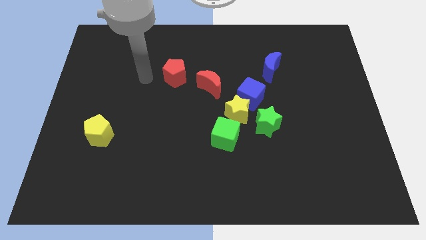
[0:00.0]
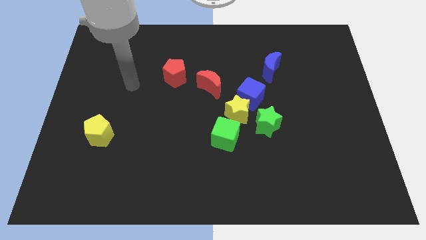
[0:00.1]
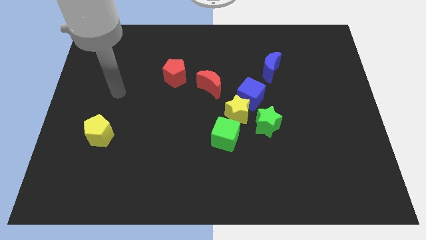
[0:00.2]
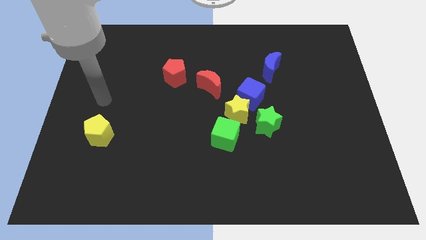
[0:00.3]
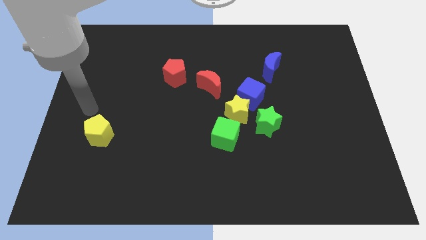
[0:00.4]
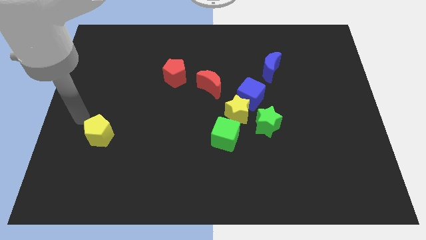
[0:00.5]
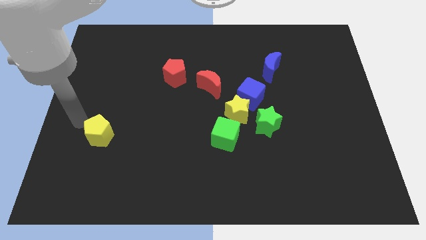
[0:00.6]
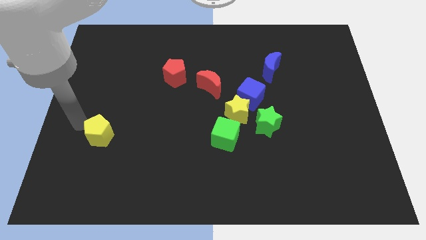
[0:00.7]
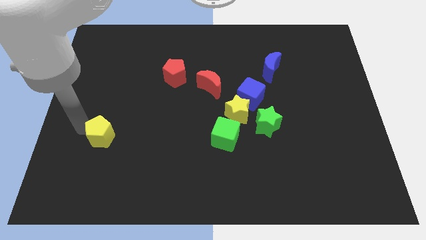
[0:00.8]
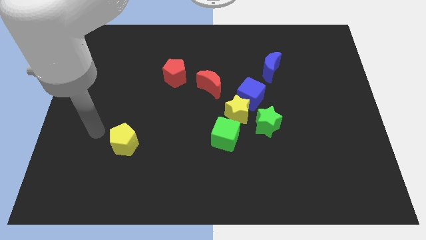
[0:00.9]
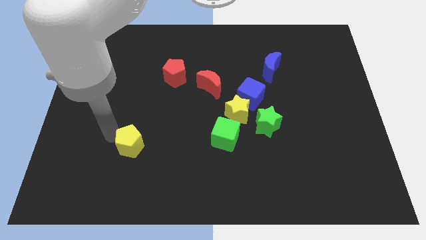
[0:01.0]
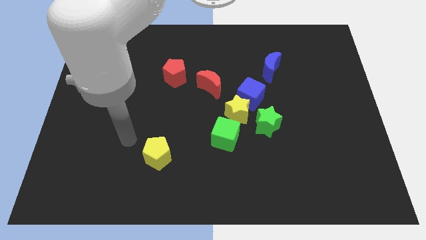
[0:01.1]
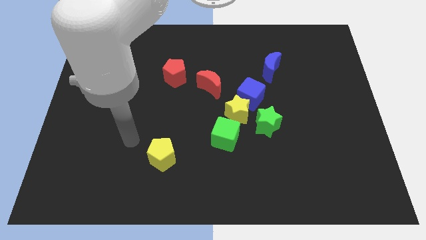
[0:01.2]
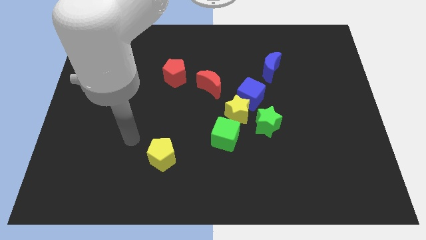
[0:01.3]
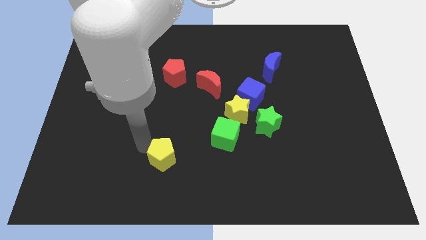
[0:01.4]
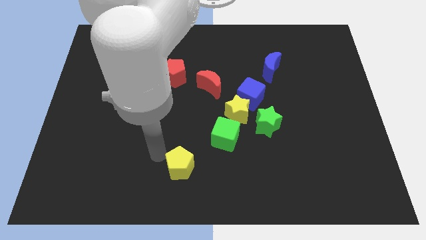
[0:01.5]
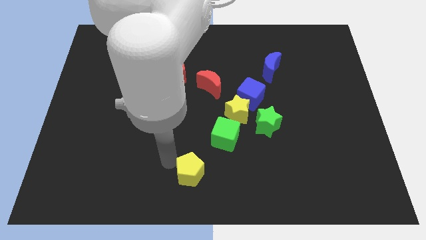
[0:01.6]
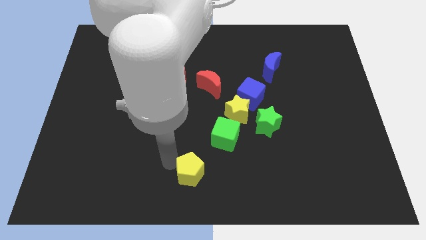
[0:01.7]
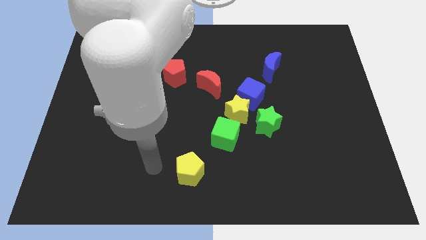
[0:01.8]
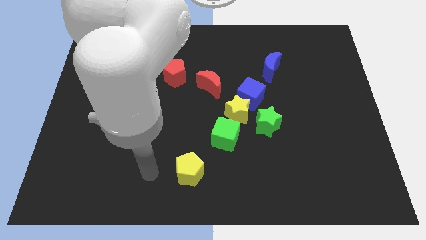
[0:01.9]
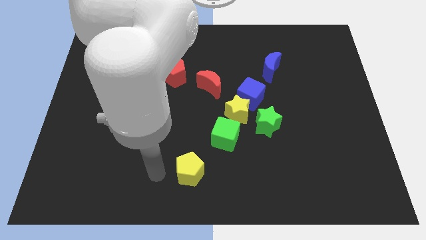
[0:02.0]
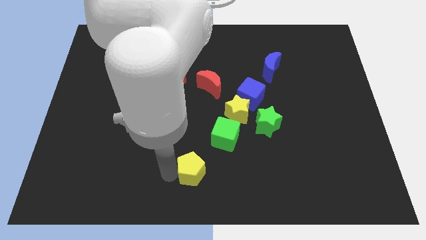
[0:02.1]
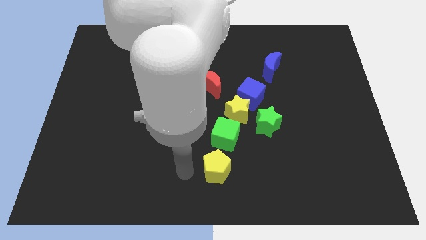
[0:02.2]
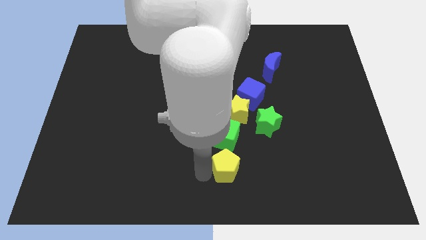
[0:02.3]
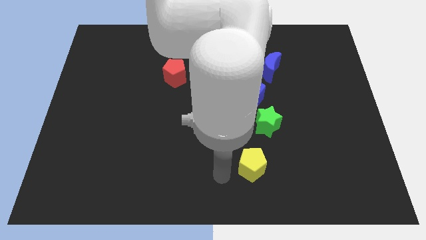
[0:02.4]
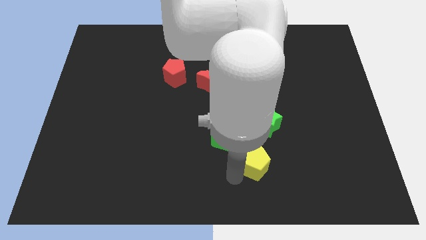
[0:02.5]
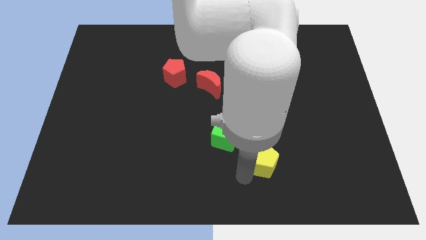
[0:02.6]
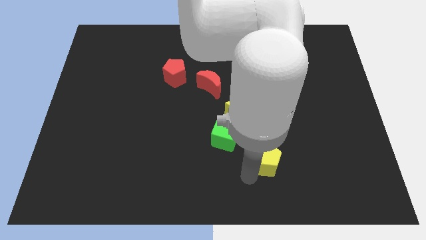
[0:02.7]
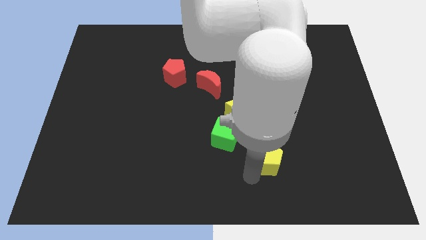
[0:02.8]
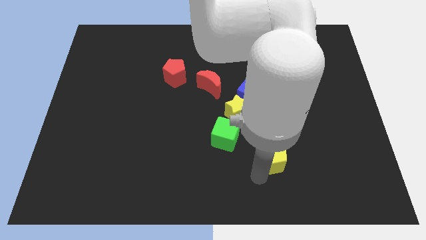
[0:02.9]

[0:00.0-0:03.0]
push the yellow pentagon below the green star

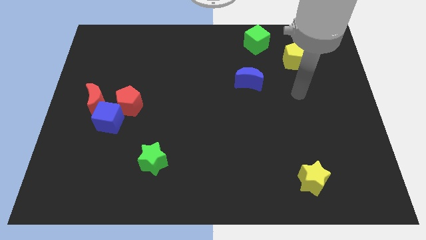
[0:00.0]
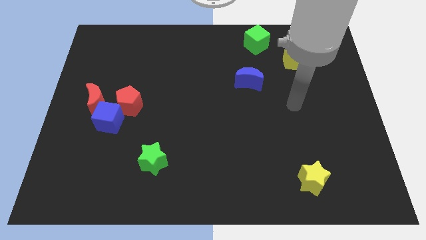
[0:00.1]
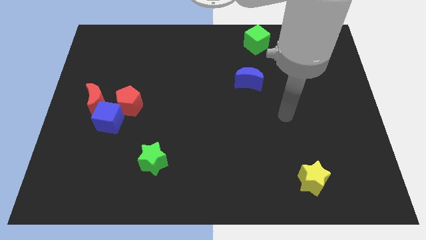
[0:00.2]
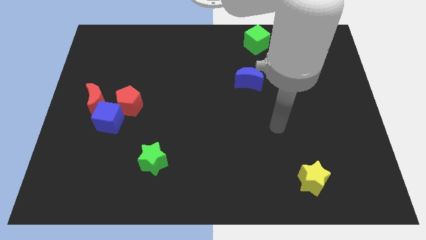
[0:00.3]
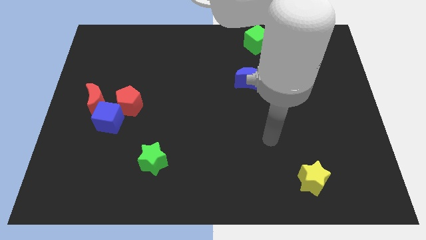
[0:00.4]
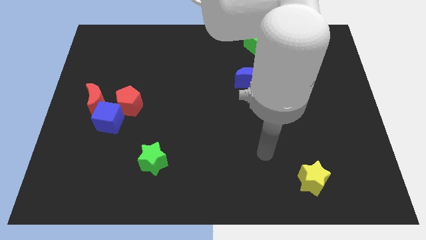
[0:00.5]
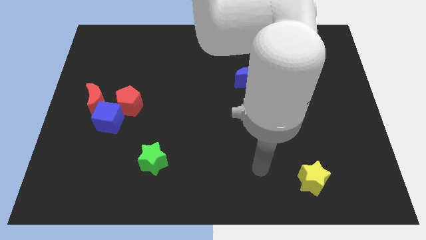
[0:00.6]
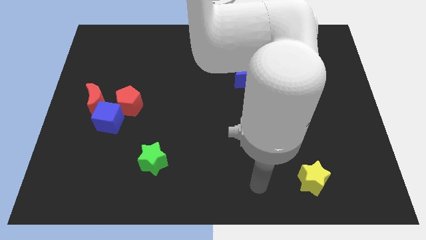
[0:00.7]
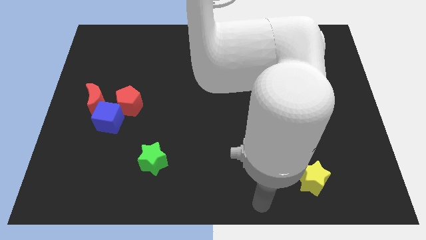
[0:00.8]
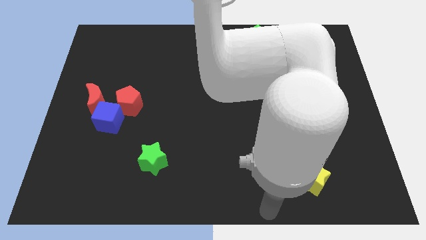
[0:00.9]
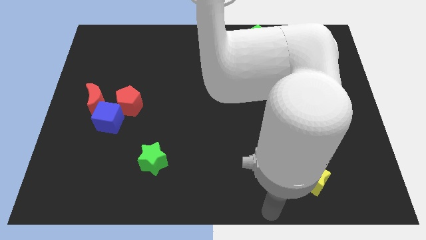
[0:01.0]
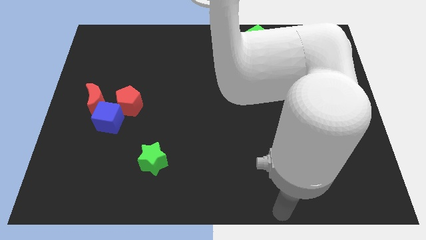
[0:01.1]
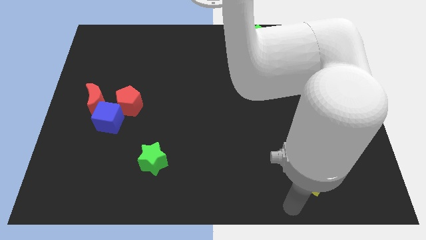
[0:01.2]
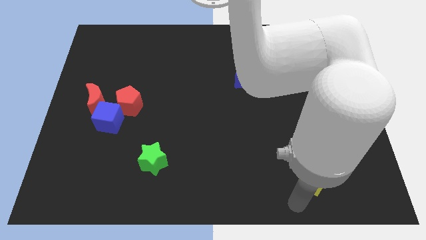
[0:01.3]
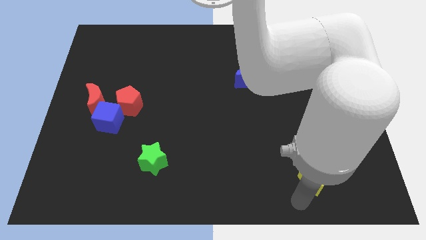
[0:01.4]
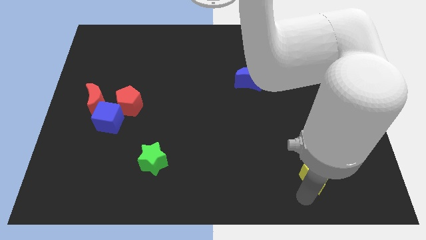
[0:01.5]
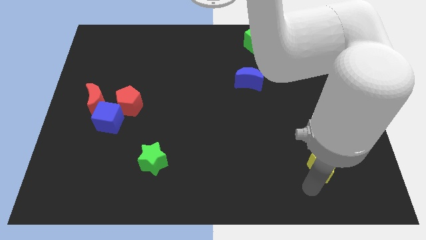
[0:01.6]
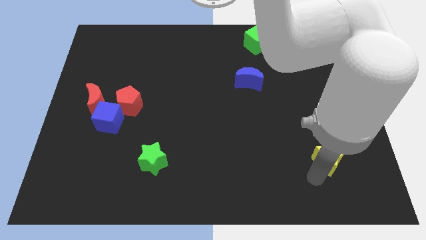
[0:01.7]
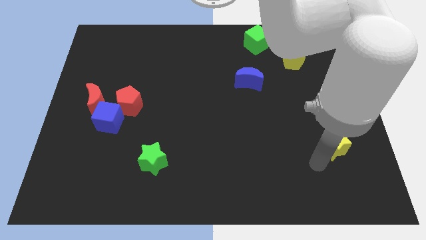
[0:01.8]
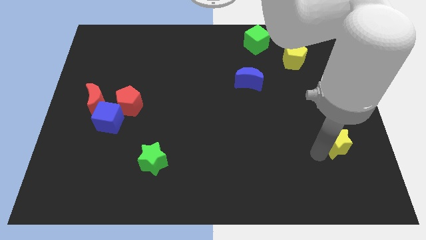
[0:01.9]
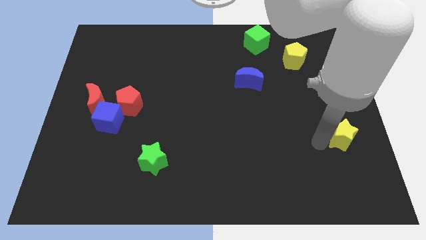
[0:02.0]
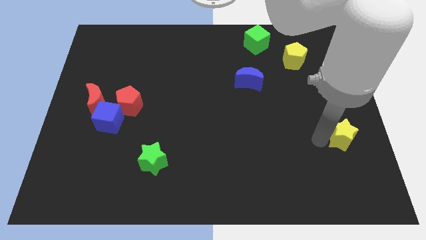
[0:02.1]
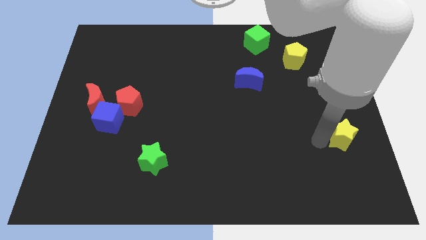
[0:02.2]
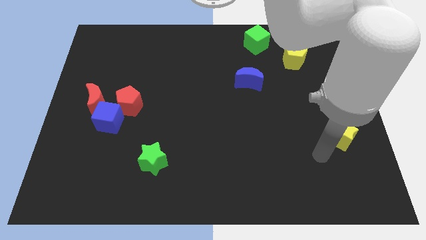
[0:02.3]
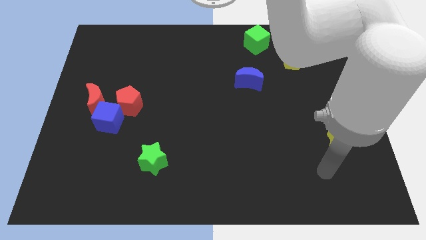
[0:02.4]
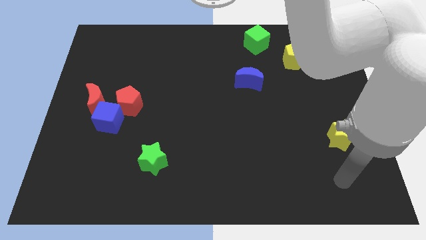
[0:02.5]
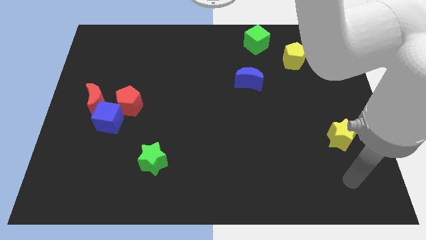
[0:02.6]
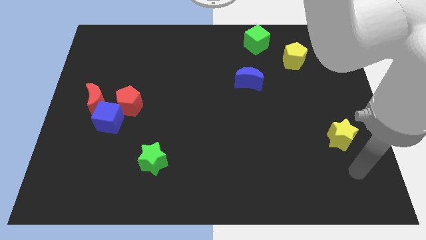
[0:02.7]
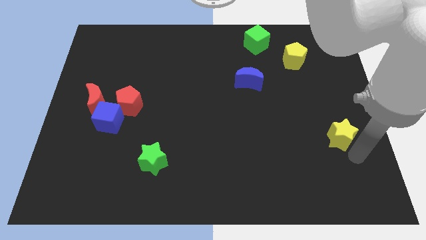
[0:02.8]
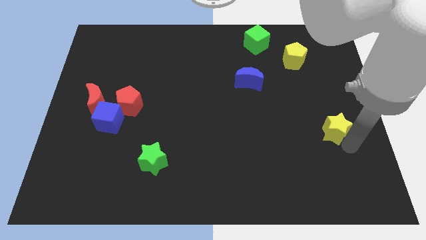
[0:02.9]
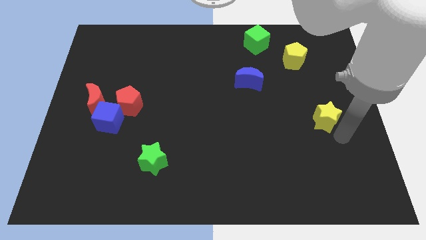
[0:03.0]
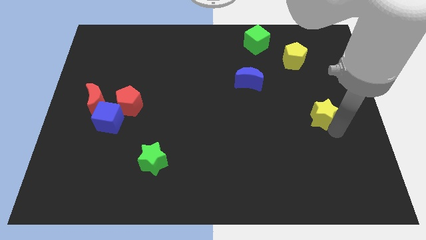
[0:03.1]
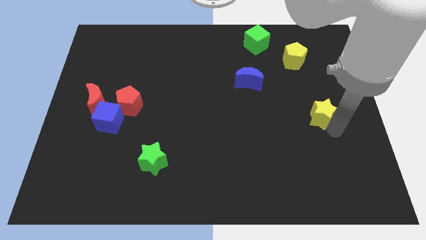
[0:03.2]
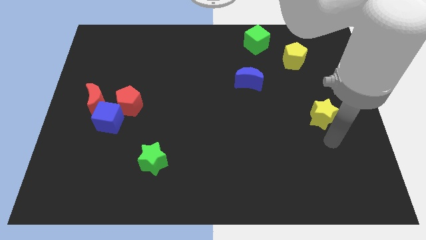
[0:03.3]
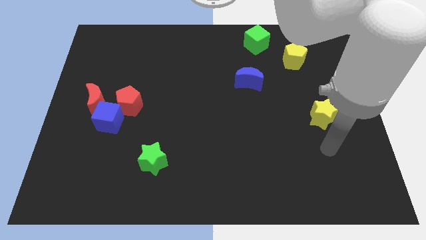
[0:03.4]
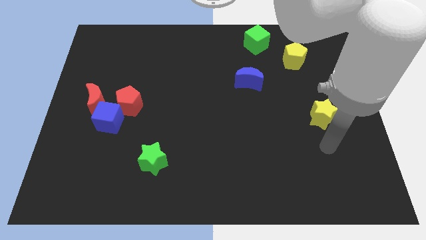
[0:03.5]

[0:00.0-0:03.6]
place the yellow star diagonally below the bottom right side of the blue moon

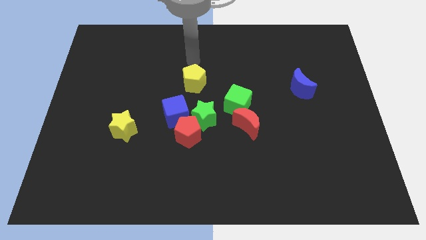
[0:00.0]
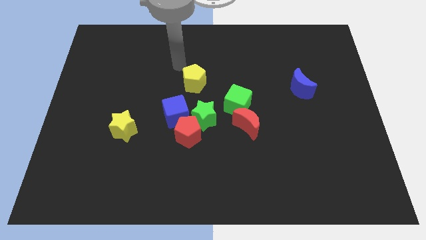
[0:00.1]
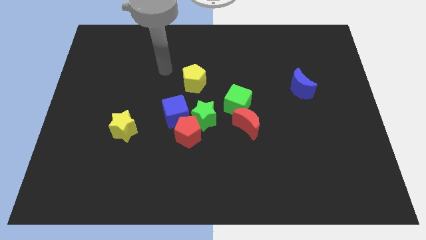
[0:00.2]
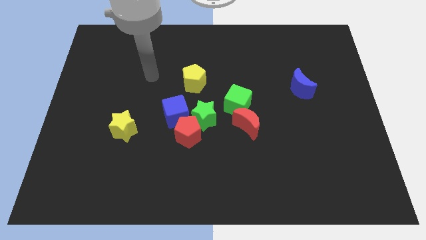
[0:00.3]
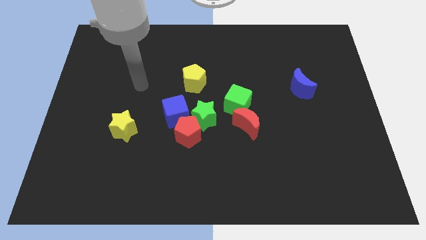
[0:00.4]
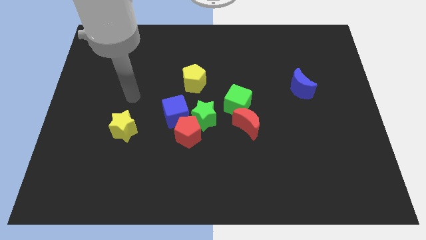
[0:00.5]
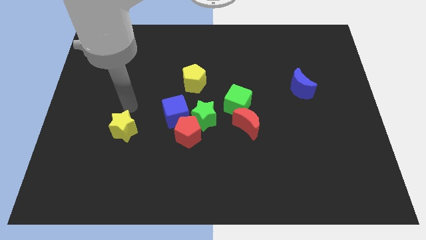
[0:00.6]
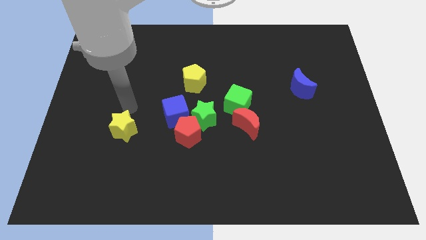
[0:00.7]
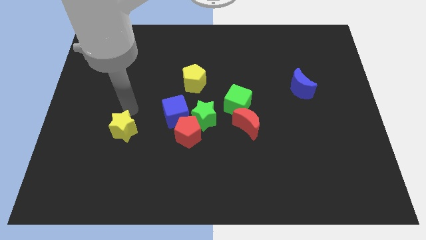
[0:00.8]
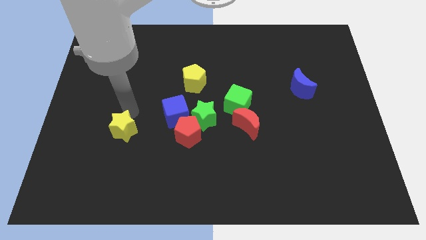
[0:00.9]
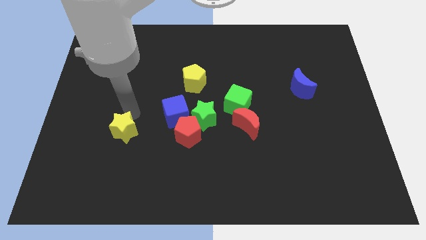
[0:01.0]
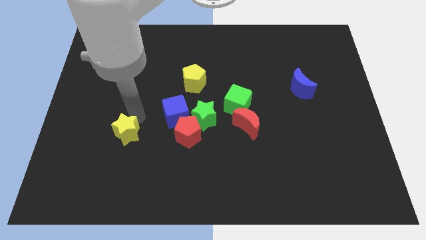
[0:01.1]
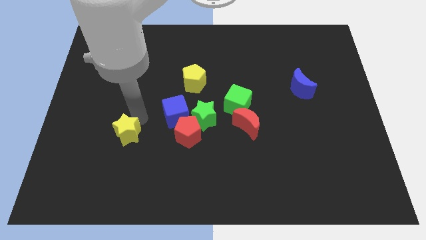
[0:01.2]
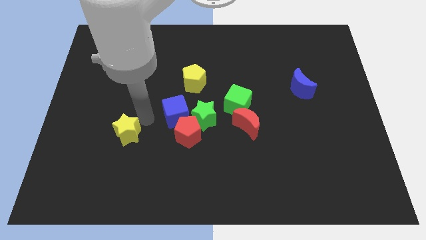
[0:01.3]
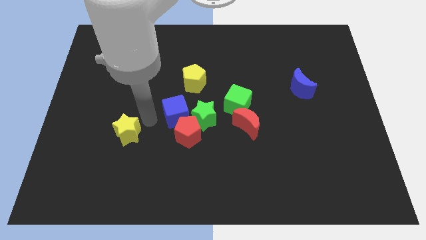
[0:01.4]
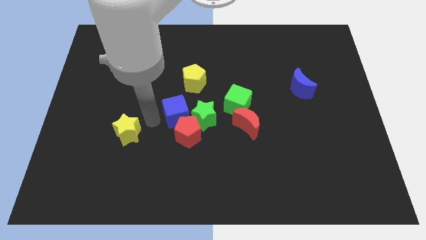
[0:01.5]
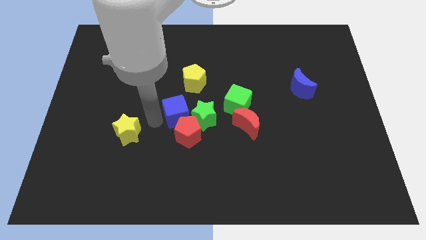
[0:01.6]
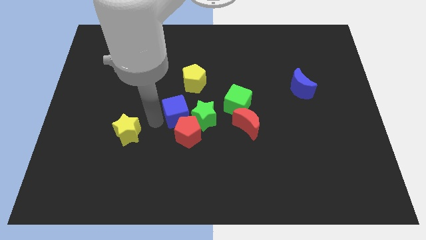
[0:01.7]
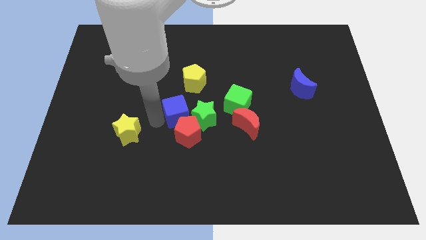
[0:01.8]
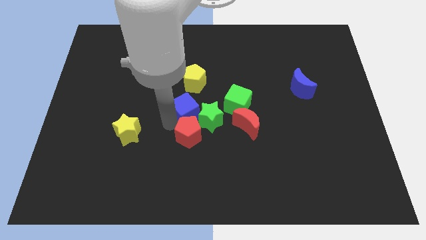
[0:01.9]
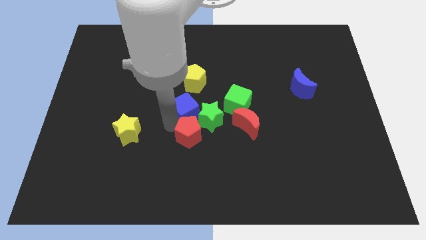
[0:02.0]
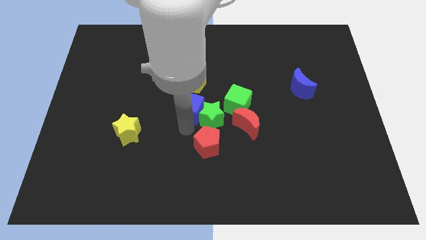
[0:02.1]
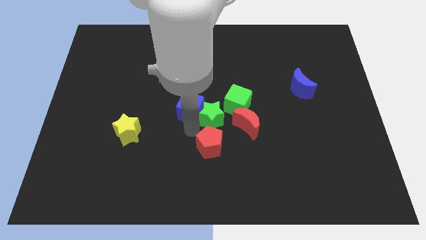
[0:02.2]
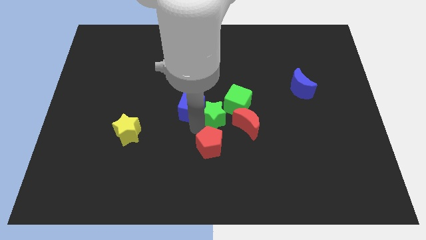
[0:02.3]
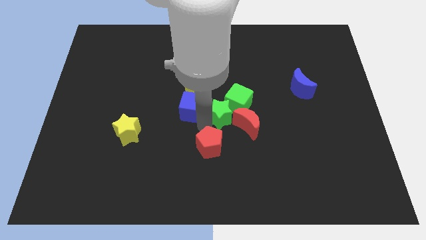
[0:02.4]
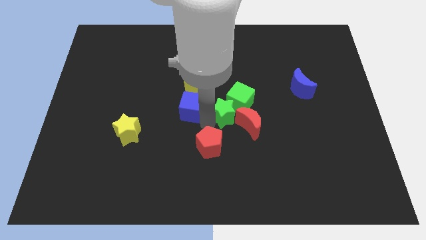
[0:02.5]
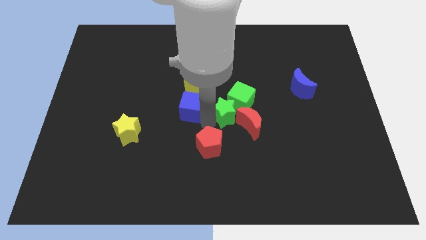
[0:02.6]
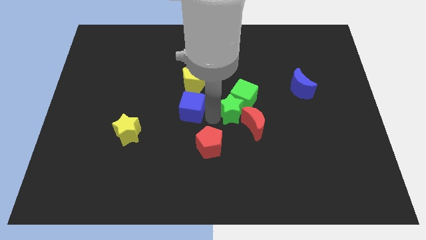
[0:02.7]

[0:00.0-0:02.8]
place the blue cube in between the yellow pentagon and red pentagon
